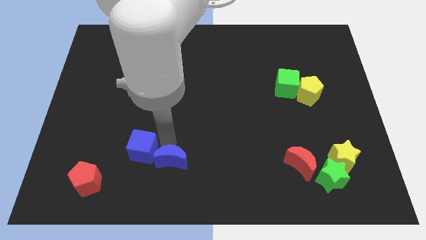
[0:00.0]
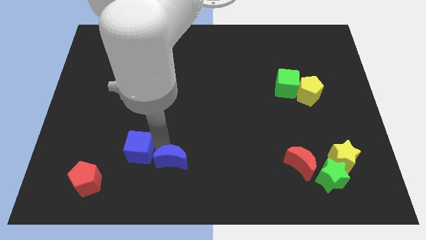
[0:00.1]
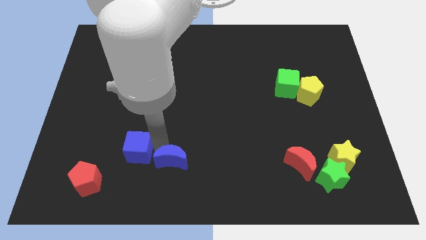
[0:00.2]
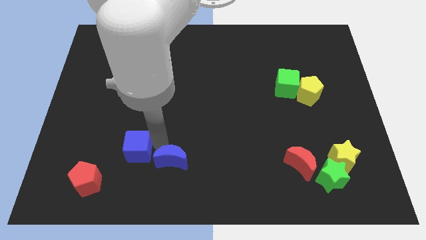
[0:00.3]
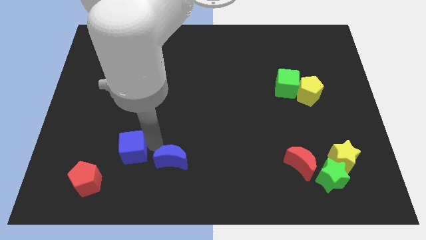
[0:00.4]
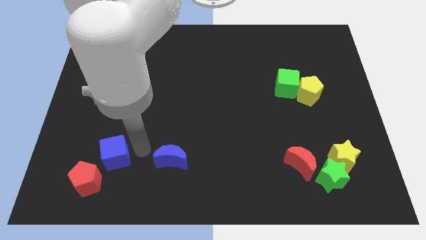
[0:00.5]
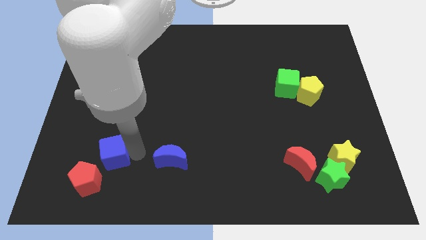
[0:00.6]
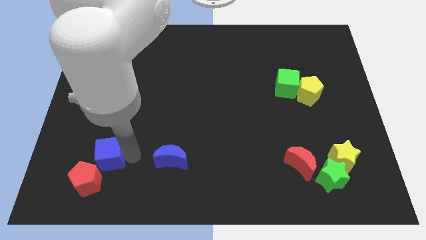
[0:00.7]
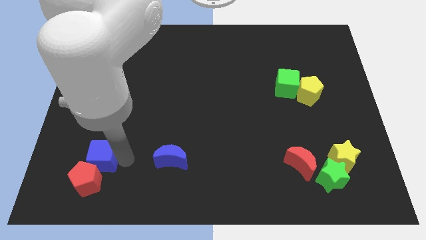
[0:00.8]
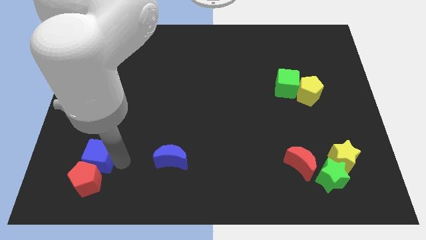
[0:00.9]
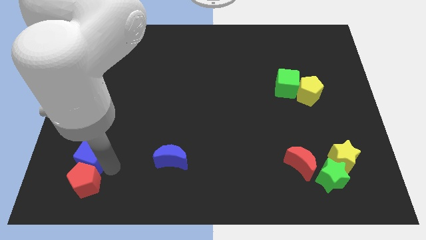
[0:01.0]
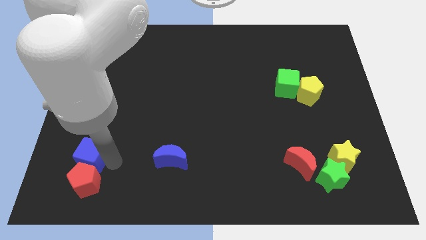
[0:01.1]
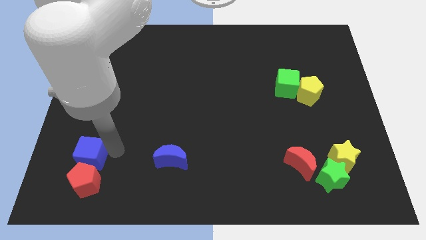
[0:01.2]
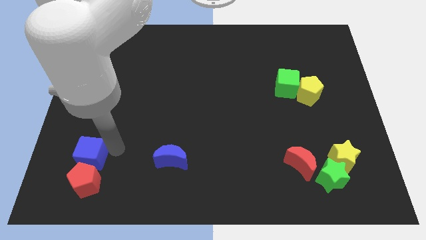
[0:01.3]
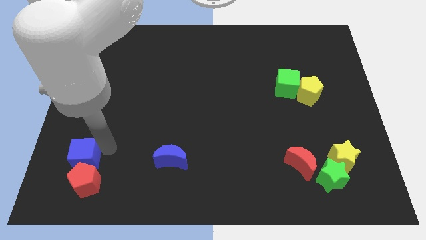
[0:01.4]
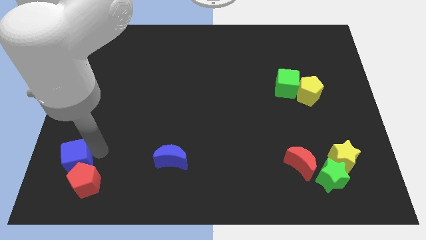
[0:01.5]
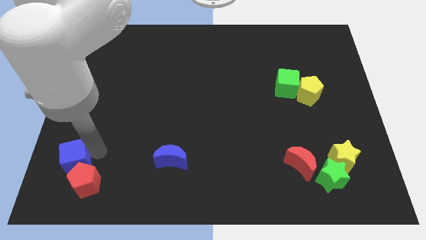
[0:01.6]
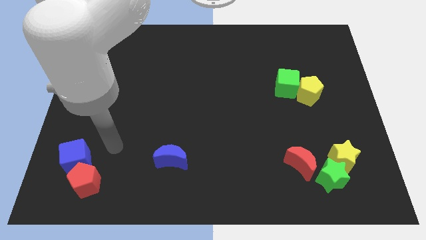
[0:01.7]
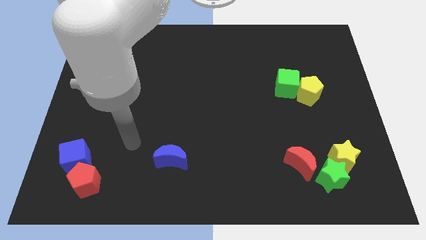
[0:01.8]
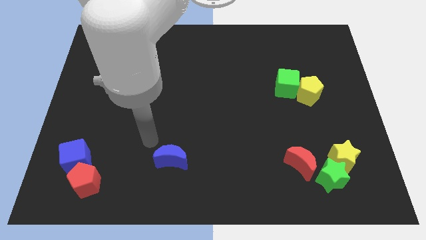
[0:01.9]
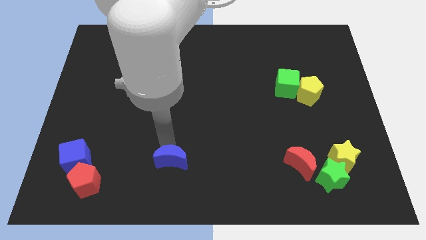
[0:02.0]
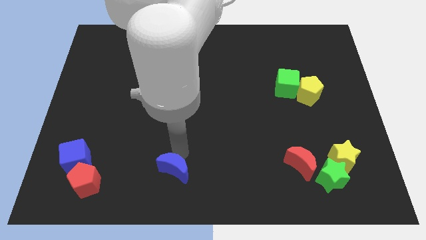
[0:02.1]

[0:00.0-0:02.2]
place the blue cube into top of the red pentagon

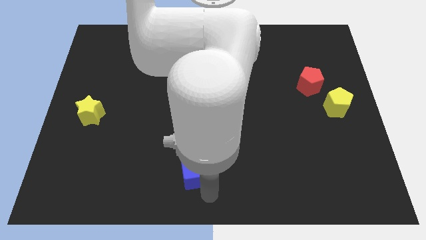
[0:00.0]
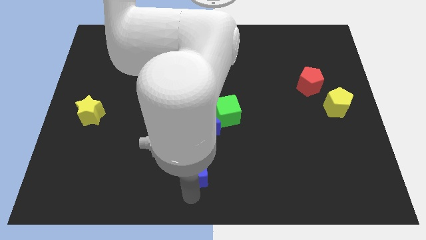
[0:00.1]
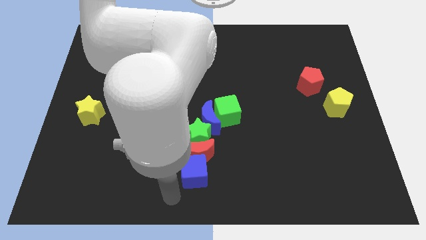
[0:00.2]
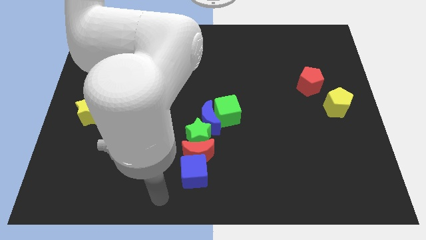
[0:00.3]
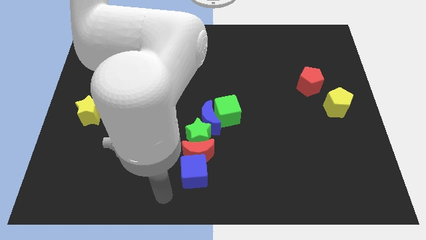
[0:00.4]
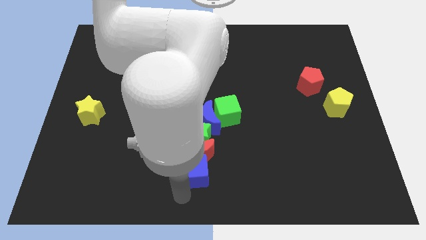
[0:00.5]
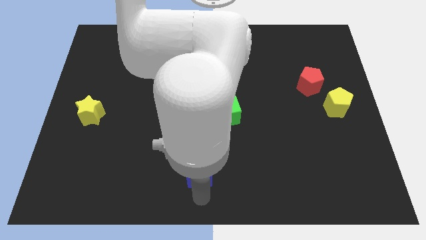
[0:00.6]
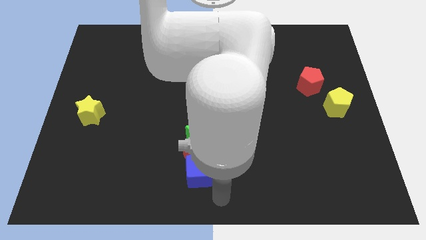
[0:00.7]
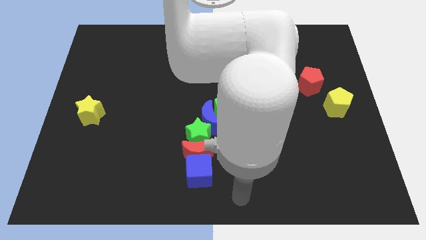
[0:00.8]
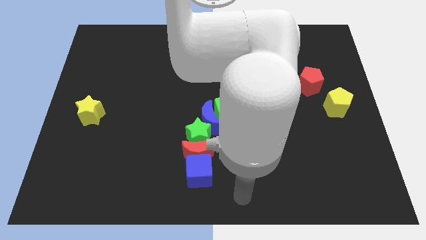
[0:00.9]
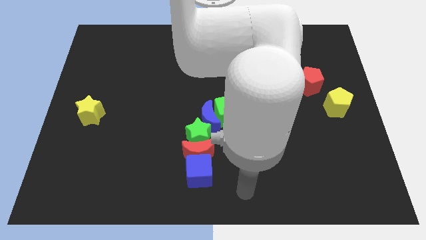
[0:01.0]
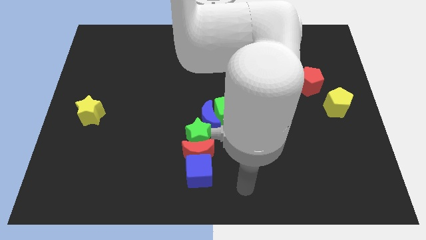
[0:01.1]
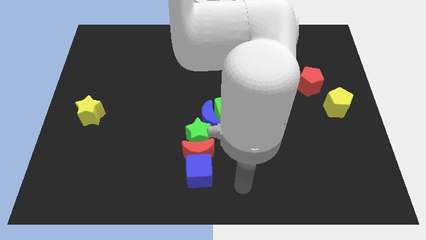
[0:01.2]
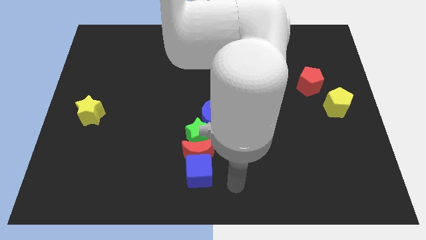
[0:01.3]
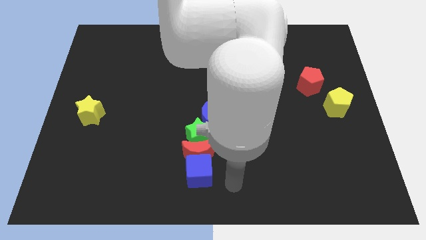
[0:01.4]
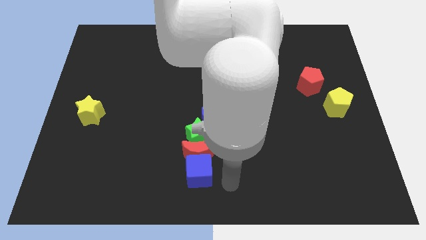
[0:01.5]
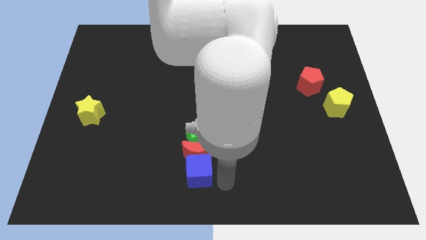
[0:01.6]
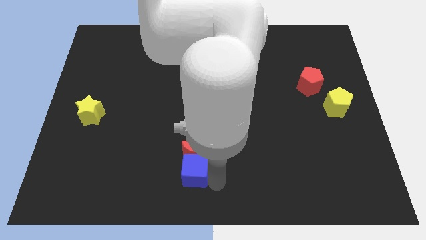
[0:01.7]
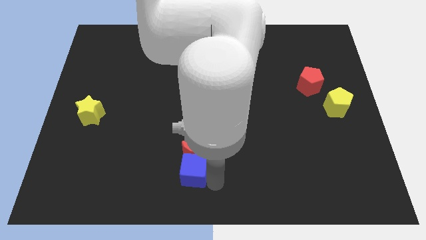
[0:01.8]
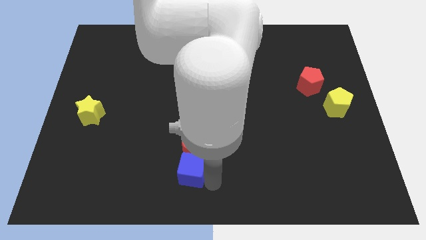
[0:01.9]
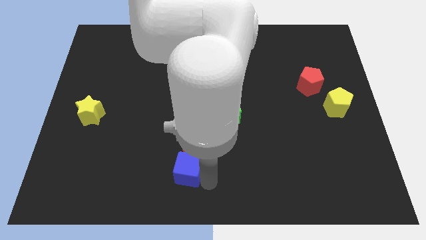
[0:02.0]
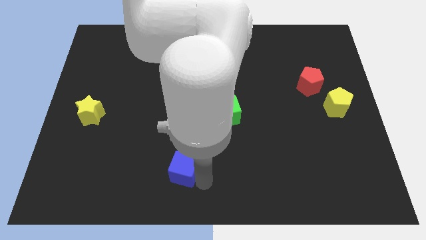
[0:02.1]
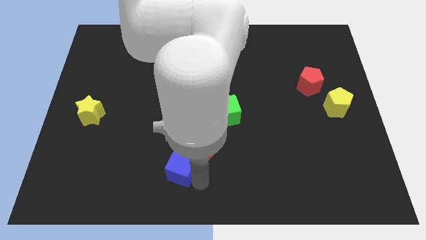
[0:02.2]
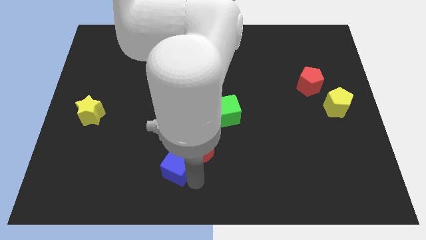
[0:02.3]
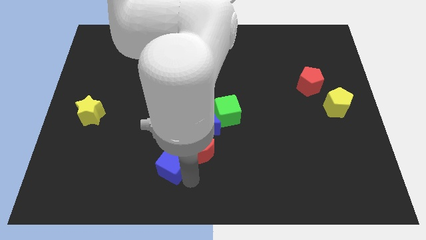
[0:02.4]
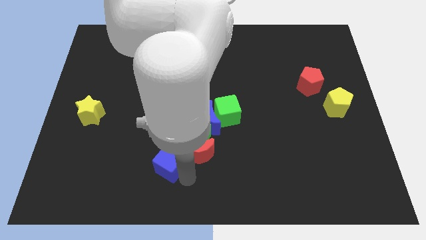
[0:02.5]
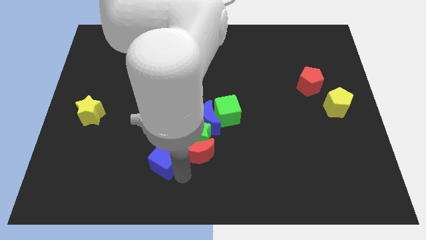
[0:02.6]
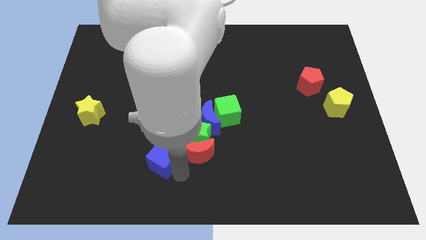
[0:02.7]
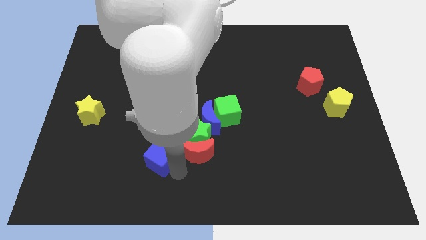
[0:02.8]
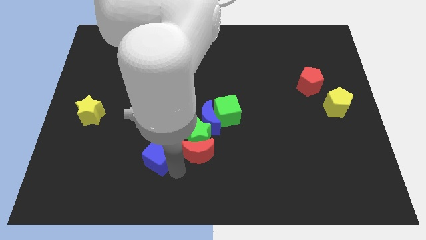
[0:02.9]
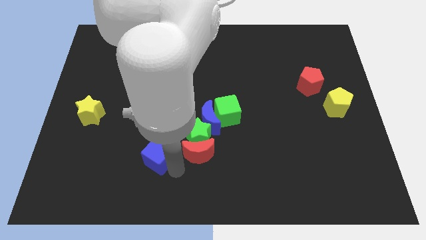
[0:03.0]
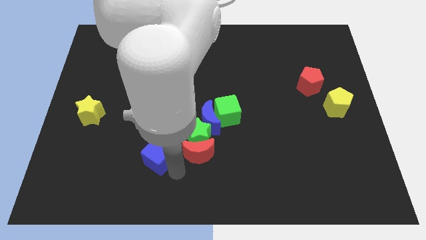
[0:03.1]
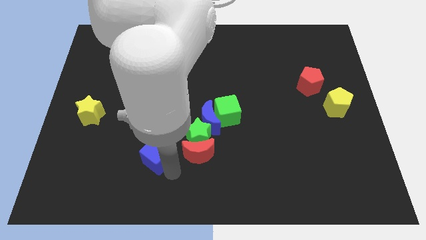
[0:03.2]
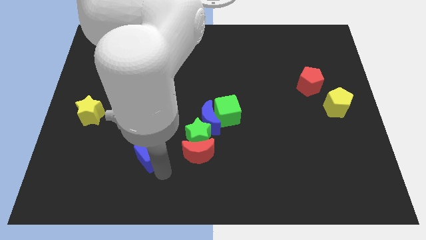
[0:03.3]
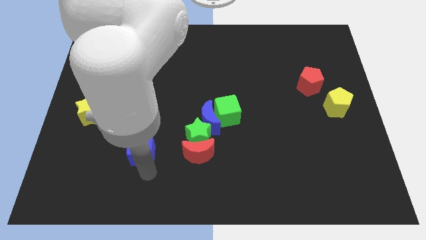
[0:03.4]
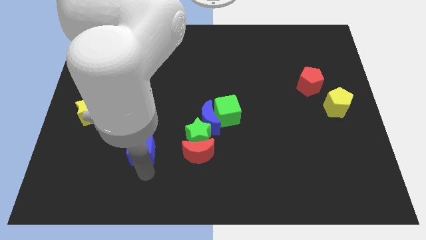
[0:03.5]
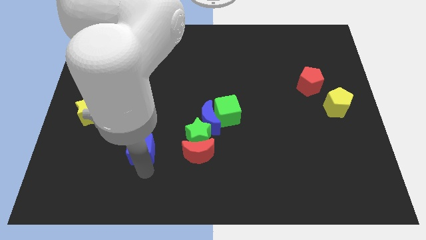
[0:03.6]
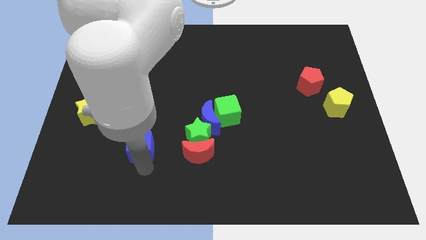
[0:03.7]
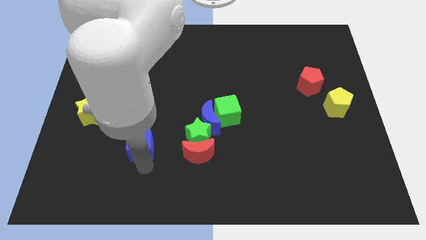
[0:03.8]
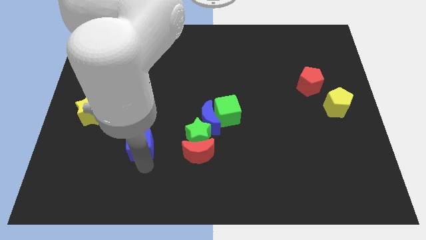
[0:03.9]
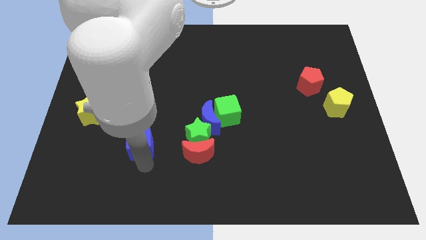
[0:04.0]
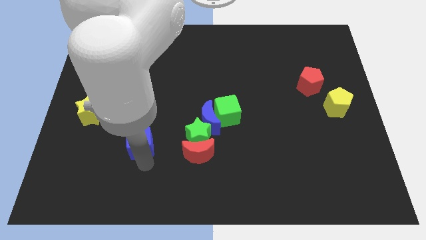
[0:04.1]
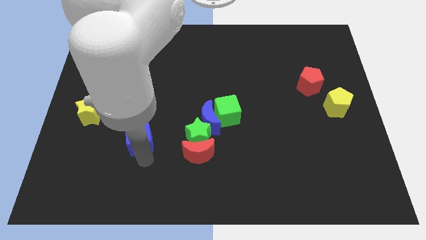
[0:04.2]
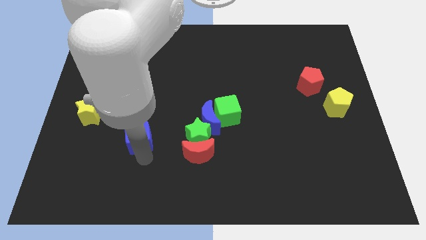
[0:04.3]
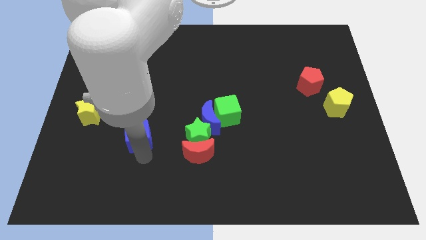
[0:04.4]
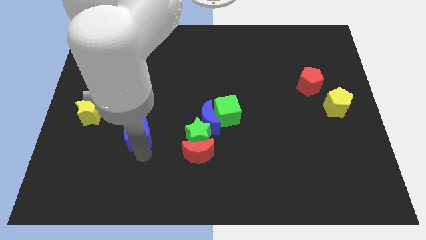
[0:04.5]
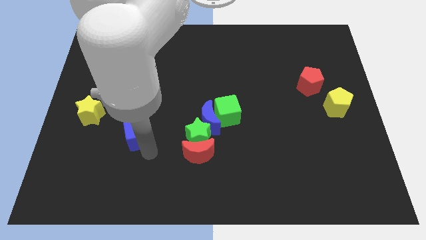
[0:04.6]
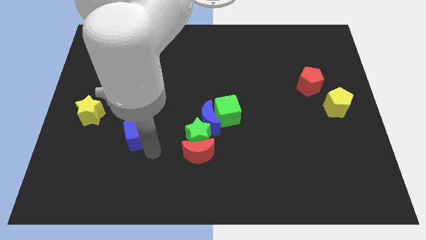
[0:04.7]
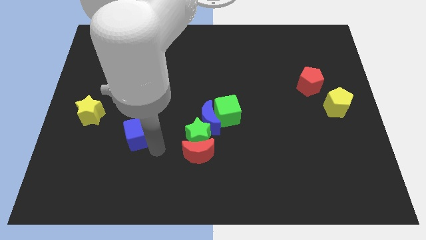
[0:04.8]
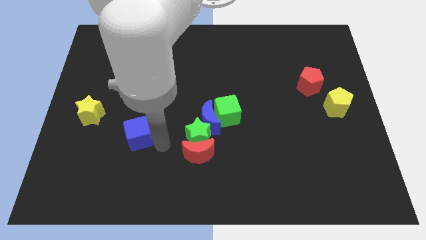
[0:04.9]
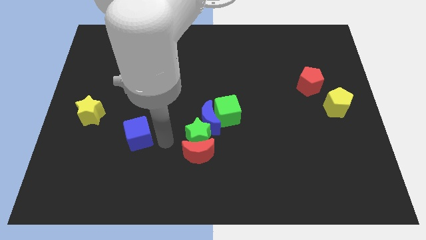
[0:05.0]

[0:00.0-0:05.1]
place the blue cube to the left of the green star

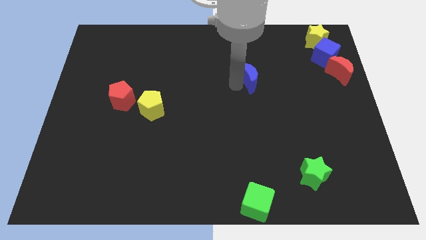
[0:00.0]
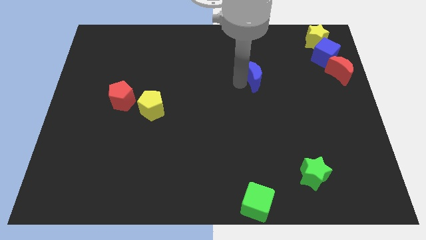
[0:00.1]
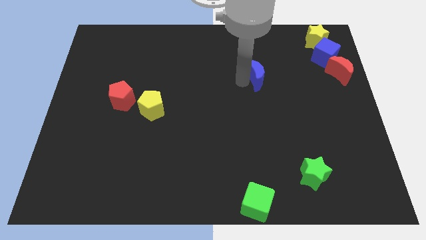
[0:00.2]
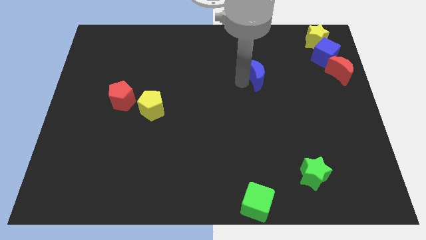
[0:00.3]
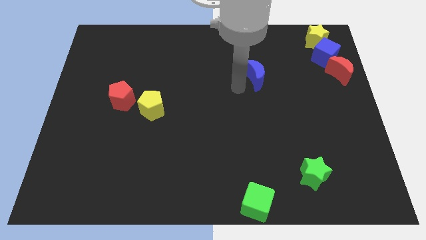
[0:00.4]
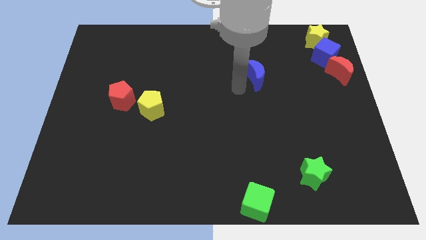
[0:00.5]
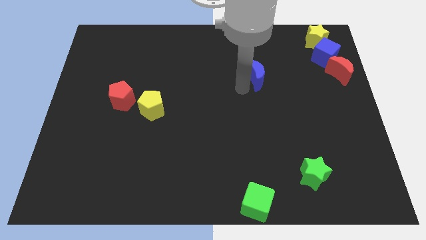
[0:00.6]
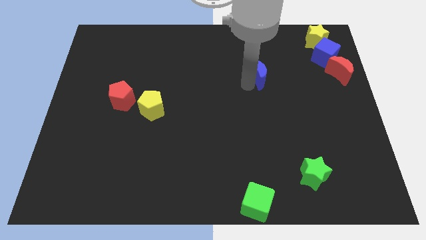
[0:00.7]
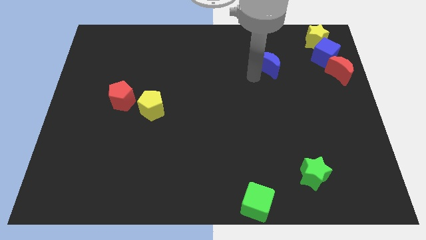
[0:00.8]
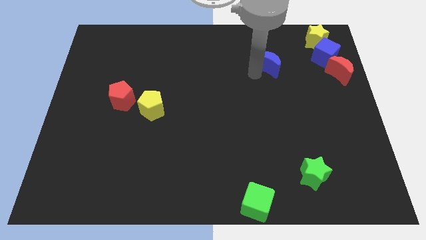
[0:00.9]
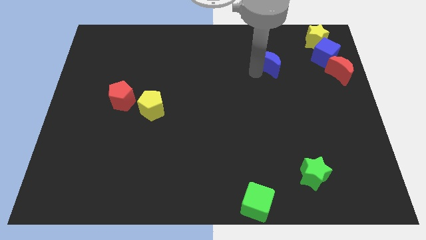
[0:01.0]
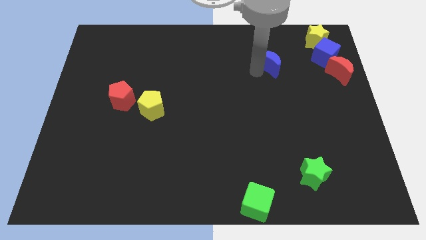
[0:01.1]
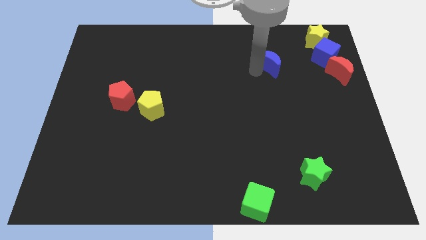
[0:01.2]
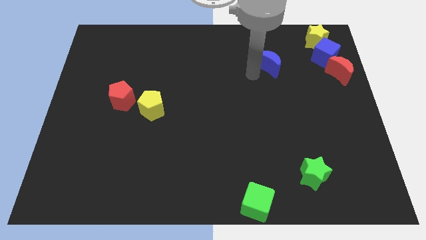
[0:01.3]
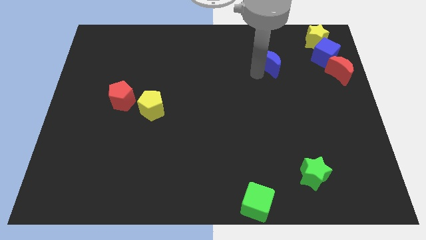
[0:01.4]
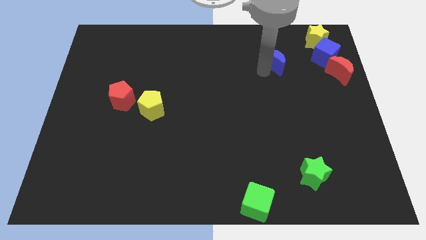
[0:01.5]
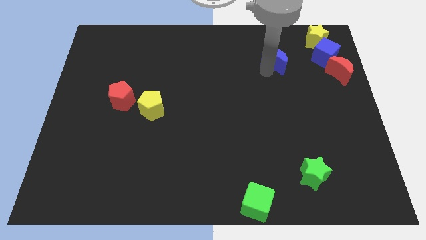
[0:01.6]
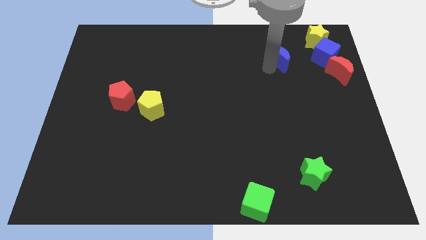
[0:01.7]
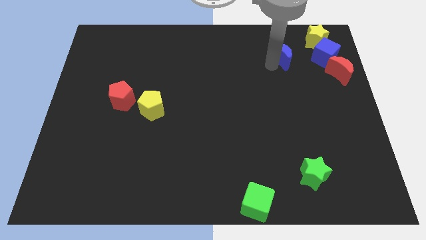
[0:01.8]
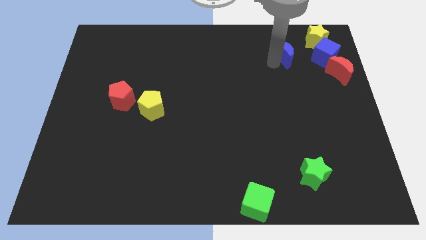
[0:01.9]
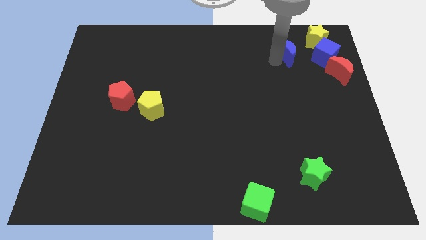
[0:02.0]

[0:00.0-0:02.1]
slide blue moon to the left of blue cube
